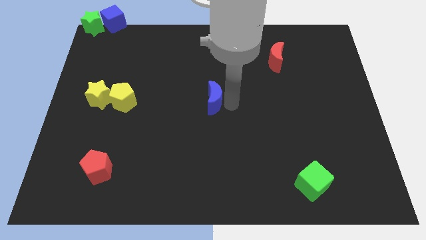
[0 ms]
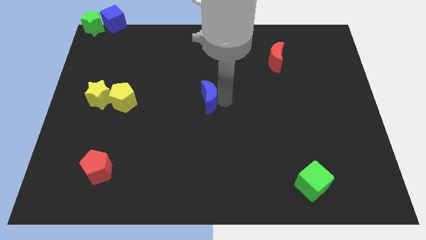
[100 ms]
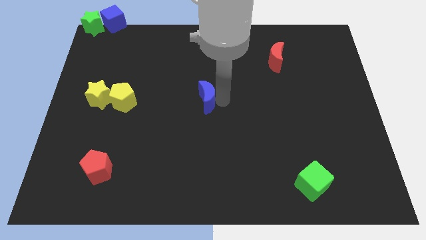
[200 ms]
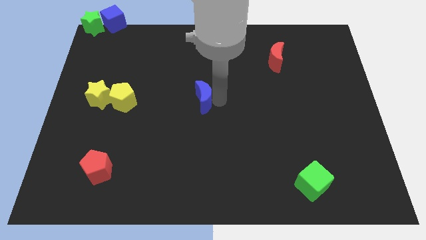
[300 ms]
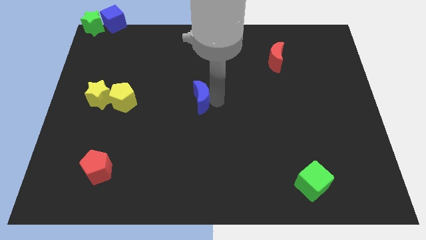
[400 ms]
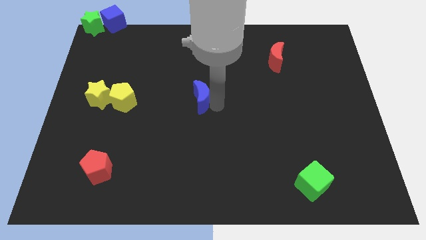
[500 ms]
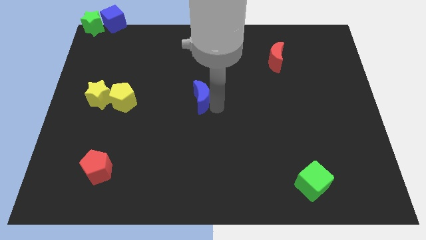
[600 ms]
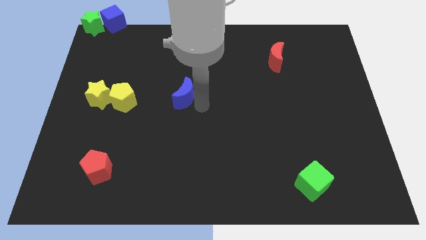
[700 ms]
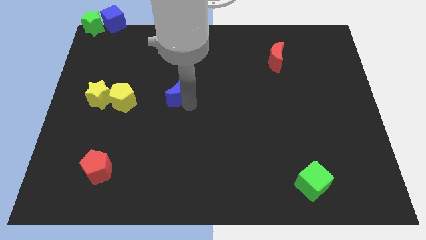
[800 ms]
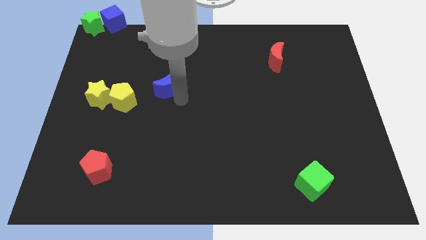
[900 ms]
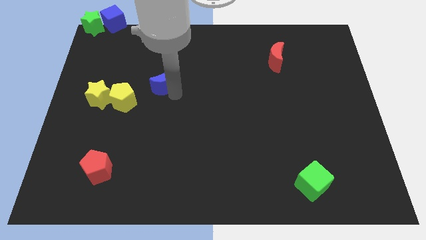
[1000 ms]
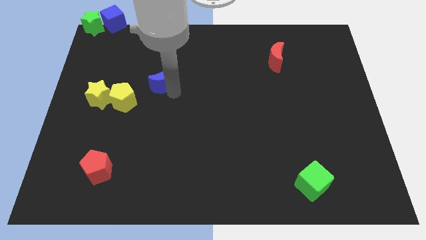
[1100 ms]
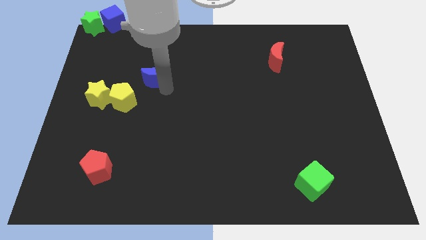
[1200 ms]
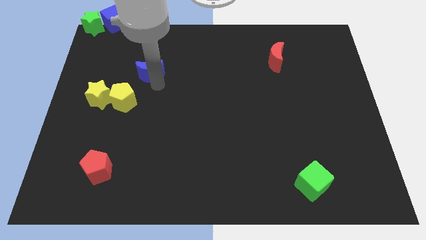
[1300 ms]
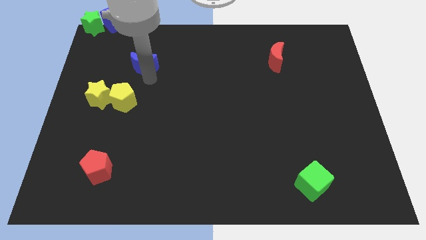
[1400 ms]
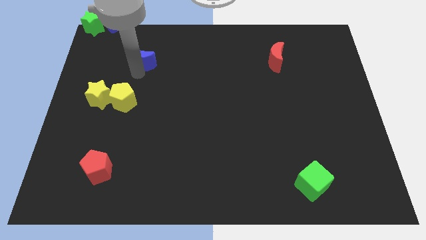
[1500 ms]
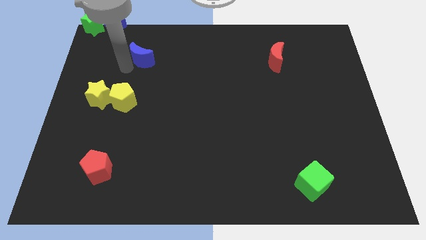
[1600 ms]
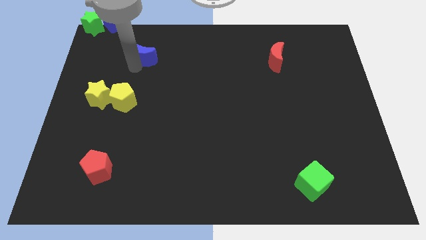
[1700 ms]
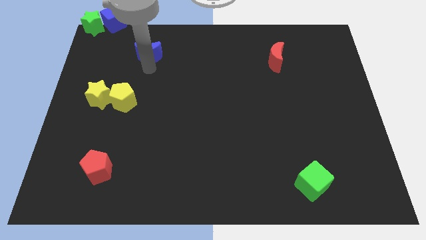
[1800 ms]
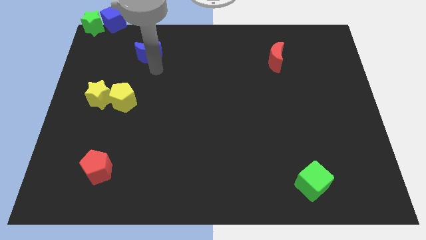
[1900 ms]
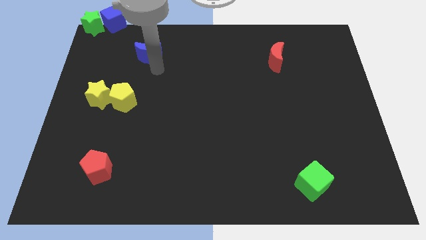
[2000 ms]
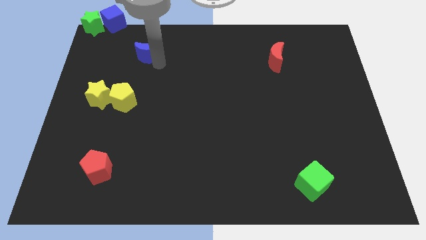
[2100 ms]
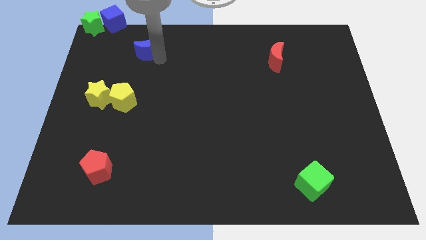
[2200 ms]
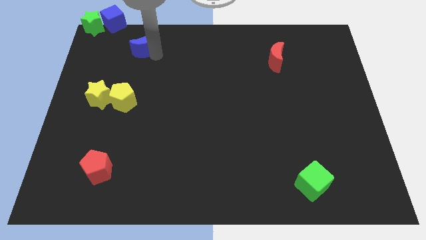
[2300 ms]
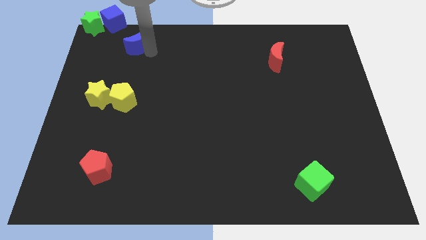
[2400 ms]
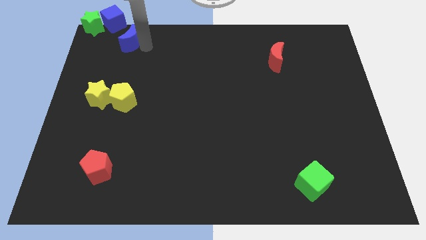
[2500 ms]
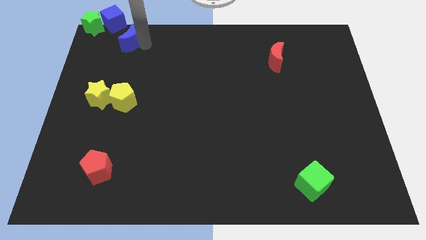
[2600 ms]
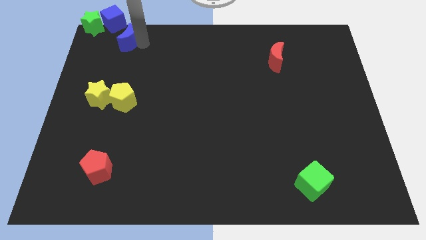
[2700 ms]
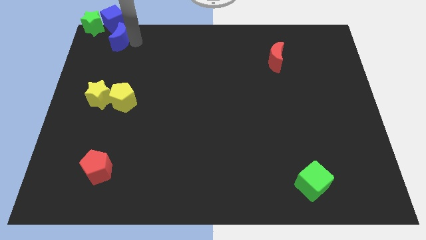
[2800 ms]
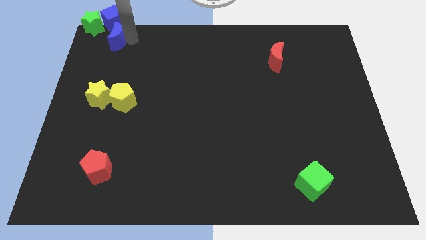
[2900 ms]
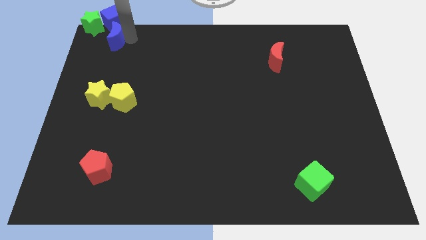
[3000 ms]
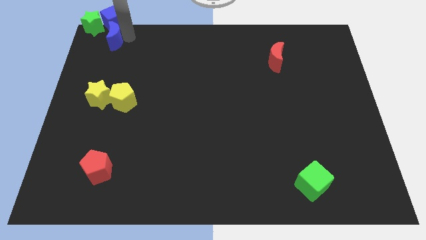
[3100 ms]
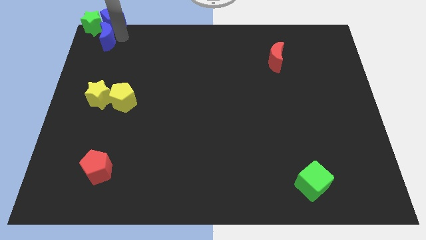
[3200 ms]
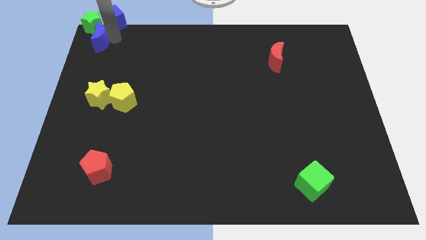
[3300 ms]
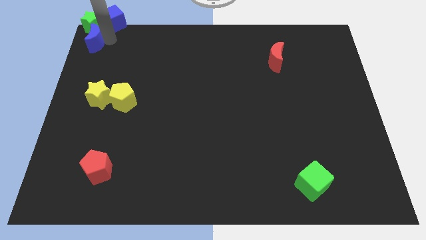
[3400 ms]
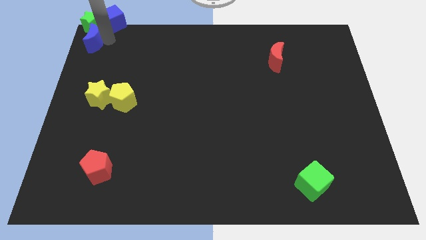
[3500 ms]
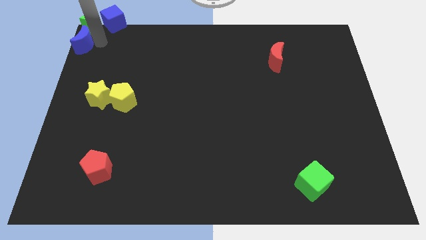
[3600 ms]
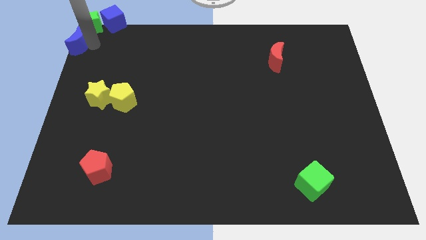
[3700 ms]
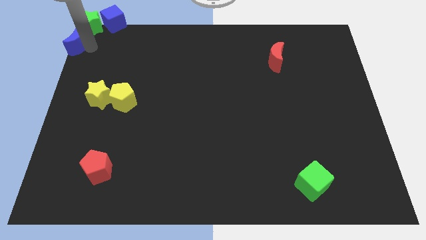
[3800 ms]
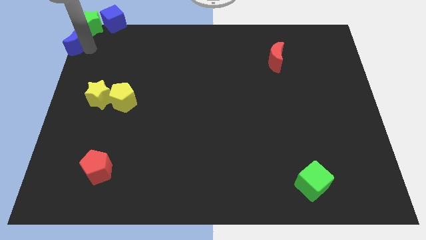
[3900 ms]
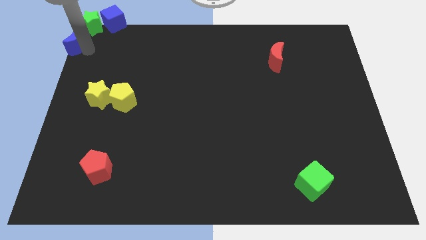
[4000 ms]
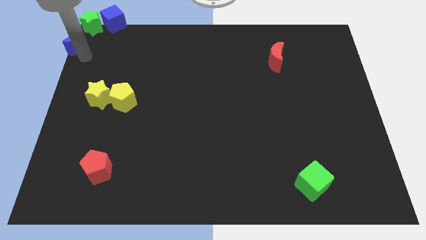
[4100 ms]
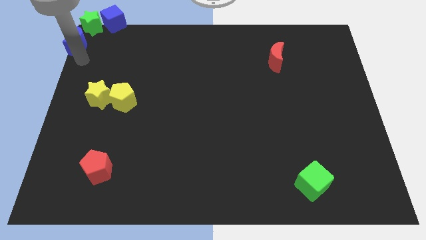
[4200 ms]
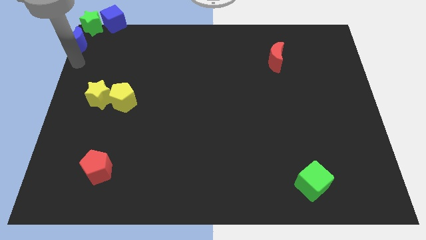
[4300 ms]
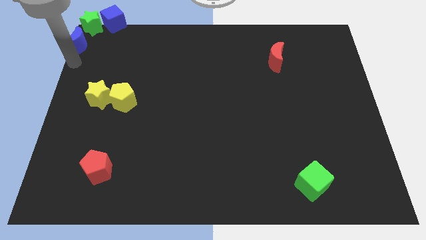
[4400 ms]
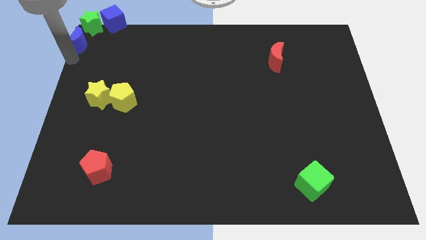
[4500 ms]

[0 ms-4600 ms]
move the blue moon to the top left corner

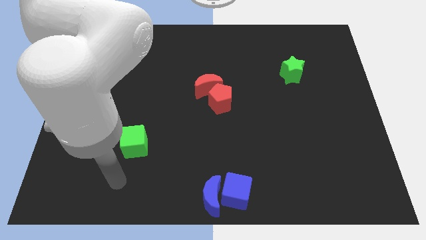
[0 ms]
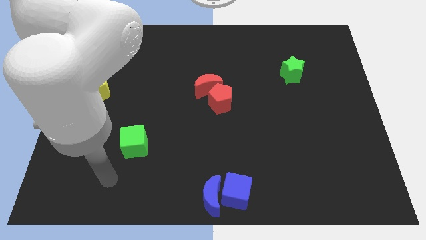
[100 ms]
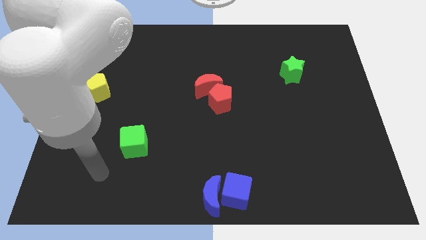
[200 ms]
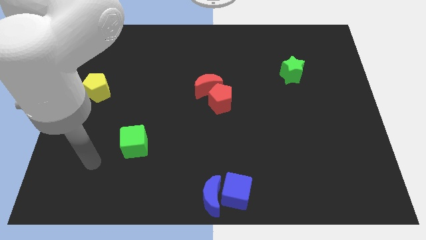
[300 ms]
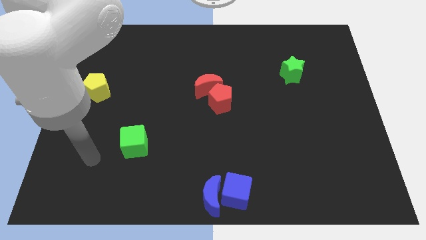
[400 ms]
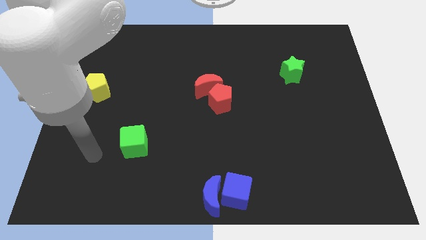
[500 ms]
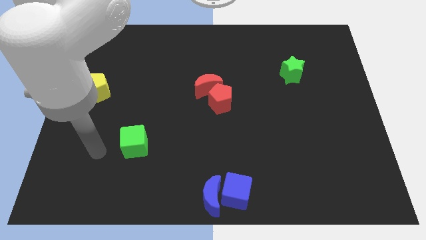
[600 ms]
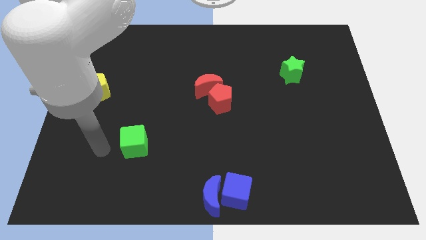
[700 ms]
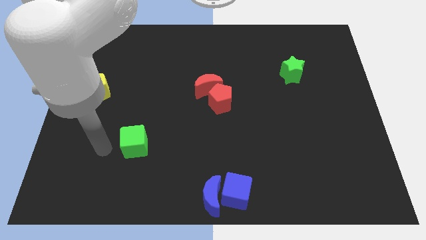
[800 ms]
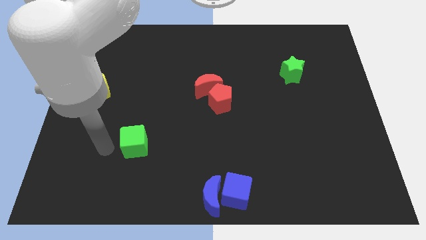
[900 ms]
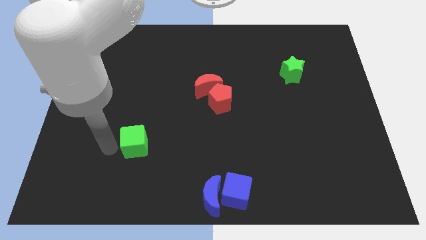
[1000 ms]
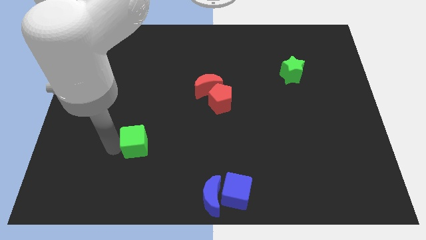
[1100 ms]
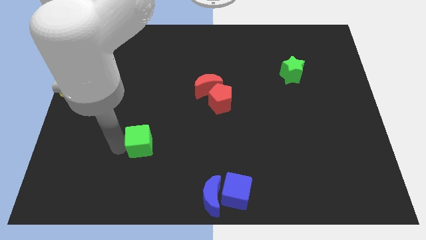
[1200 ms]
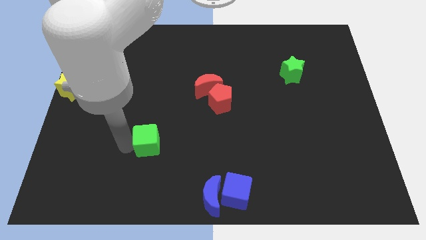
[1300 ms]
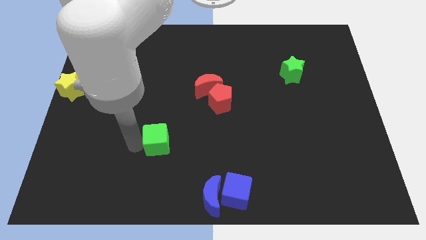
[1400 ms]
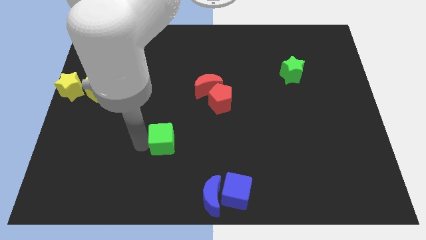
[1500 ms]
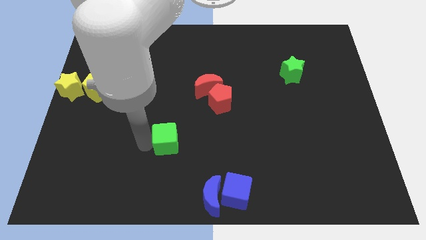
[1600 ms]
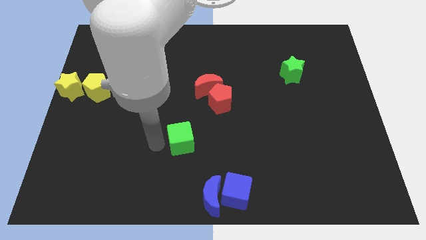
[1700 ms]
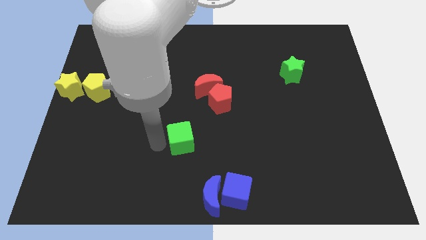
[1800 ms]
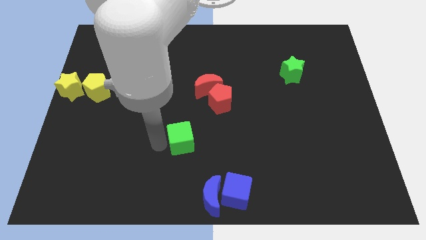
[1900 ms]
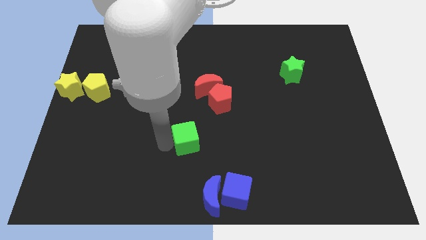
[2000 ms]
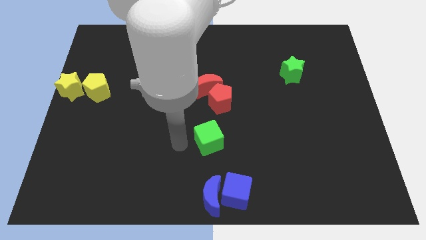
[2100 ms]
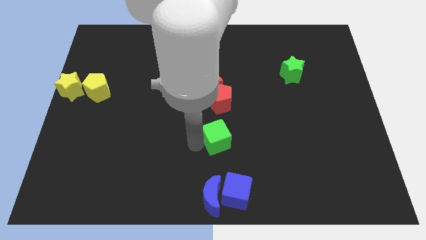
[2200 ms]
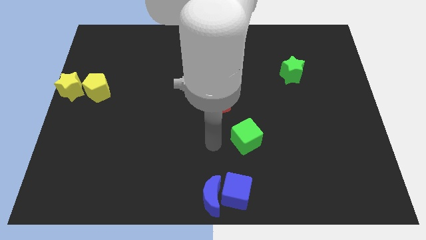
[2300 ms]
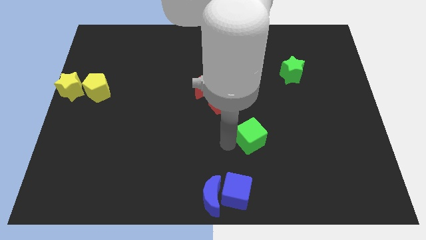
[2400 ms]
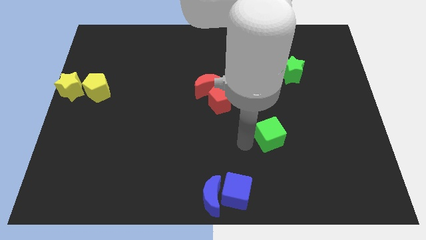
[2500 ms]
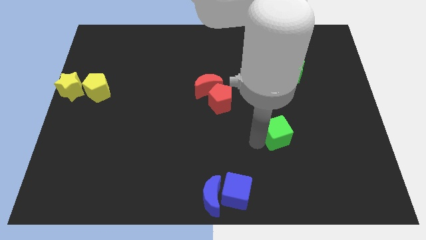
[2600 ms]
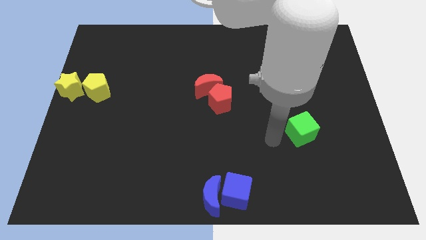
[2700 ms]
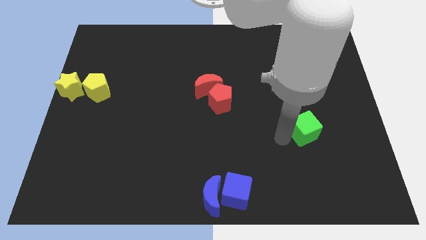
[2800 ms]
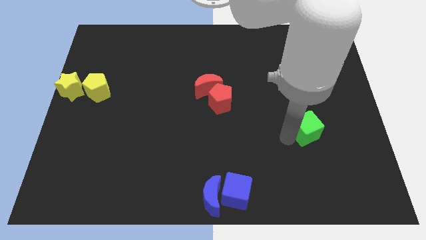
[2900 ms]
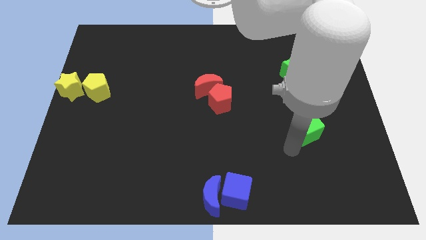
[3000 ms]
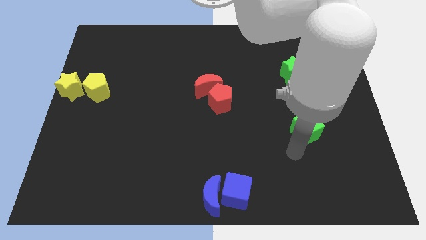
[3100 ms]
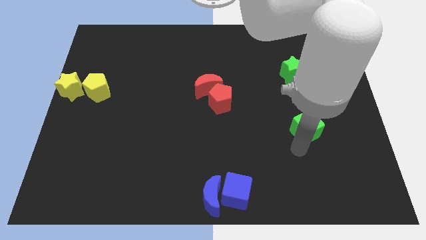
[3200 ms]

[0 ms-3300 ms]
move green cube towards the right side of the board

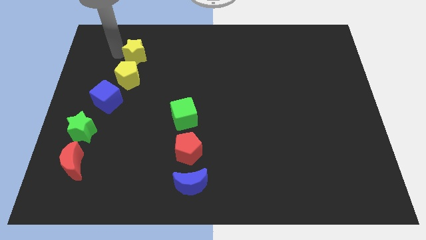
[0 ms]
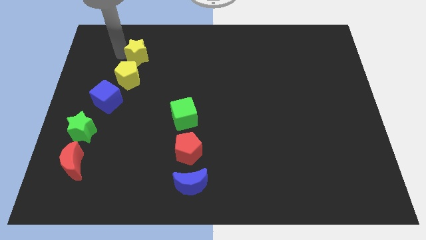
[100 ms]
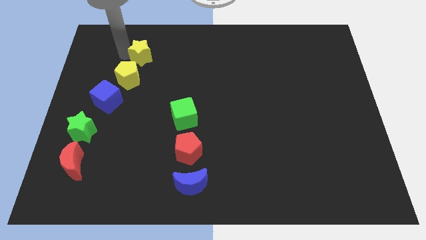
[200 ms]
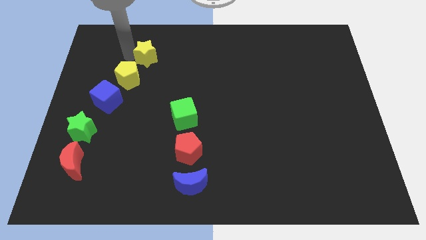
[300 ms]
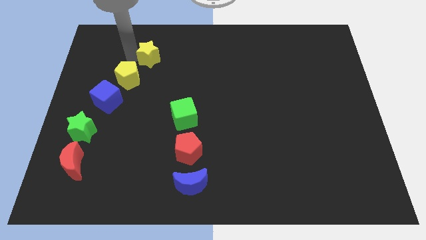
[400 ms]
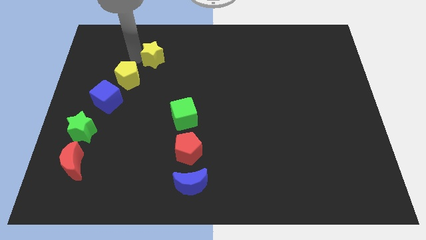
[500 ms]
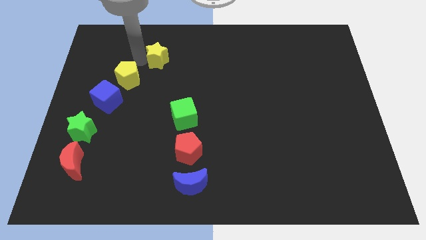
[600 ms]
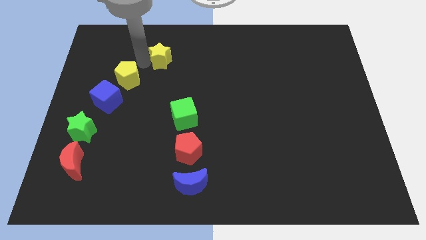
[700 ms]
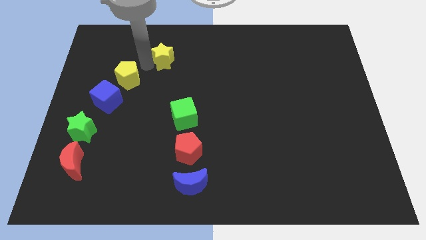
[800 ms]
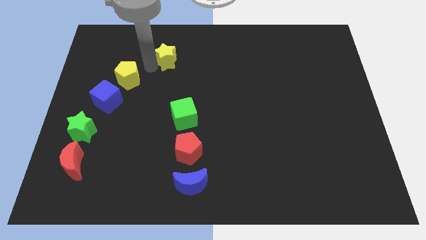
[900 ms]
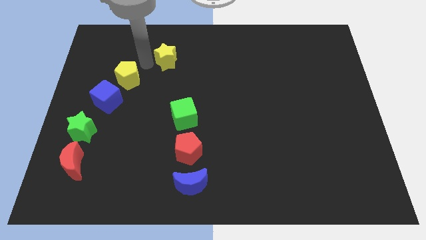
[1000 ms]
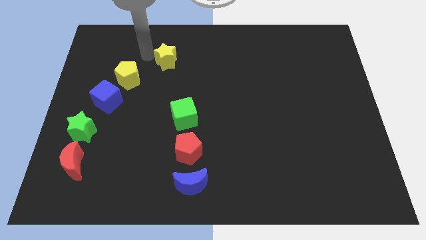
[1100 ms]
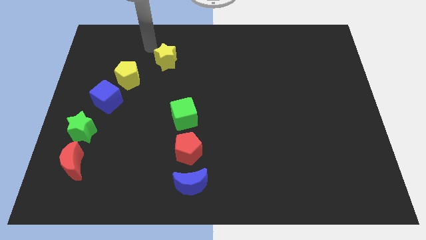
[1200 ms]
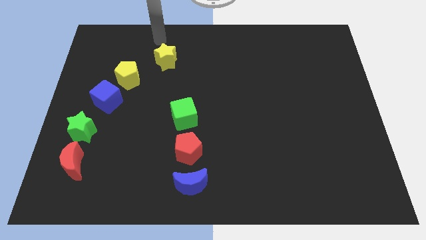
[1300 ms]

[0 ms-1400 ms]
move the yellow star to the right
